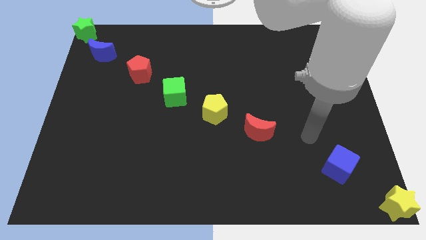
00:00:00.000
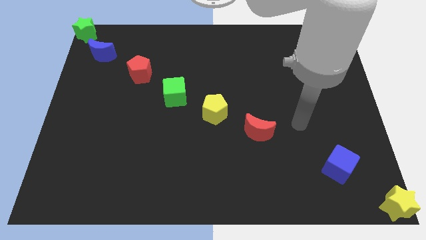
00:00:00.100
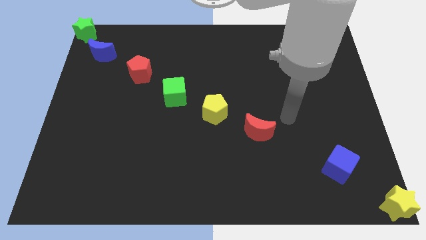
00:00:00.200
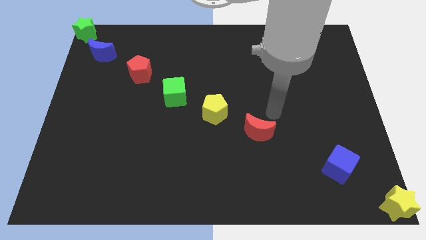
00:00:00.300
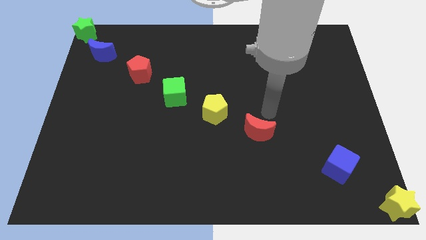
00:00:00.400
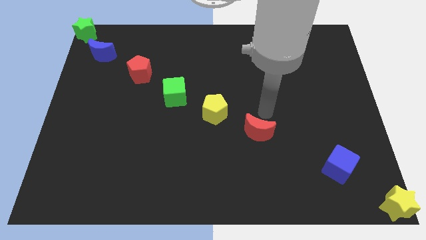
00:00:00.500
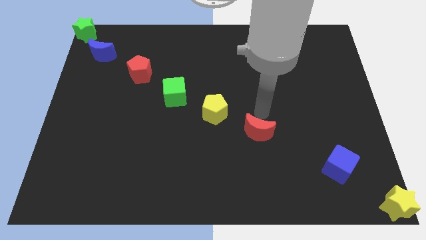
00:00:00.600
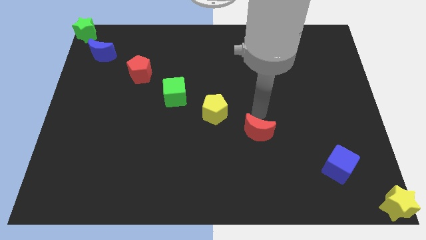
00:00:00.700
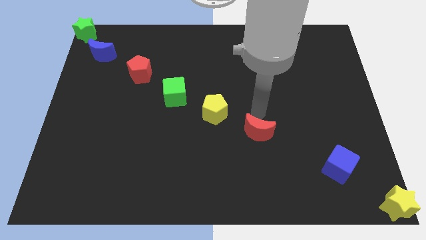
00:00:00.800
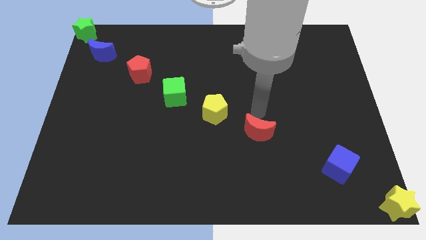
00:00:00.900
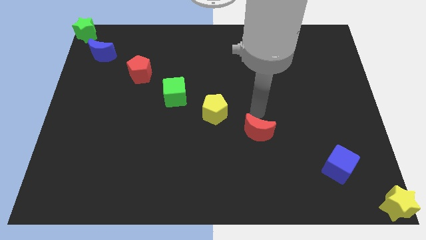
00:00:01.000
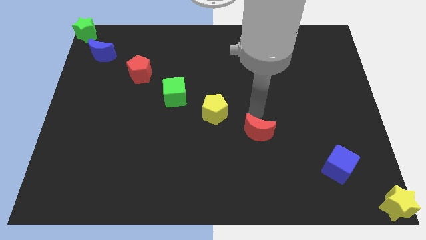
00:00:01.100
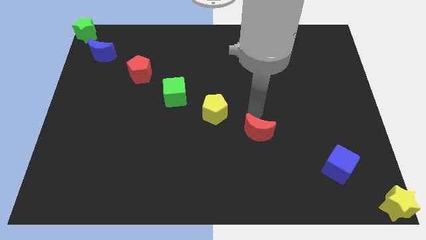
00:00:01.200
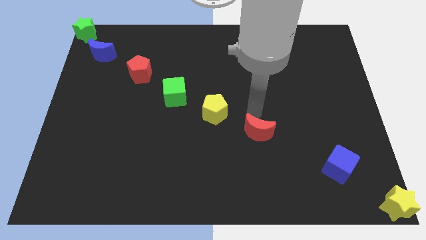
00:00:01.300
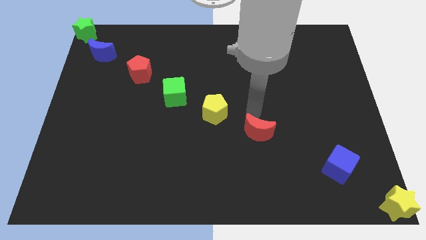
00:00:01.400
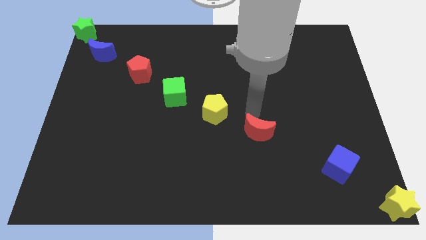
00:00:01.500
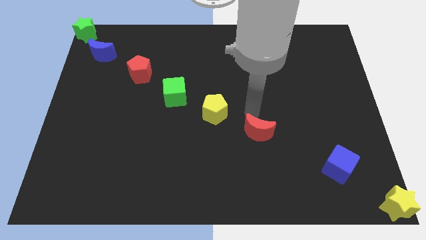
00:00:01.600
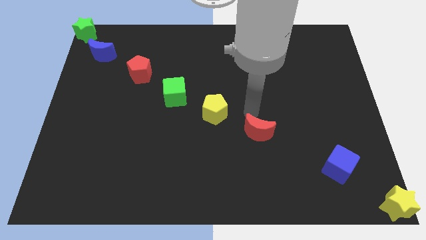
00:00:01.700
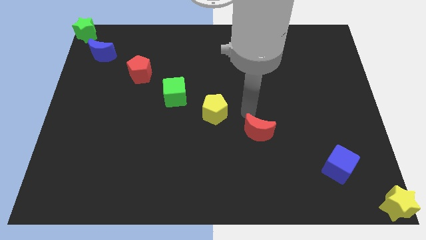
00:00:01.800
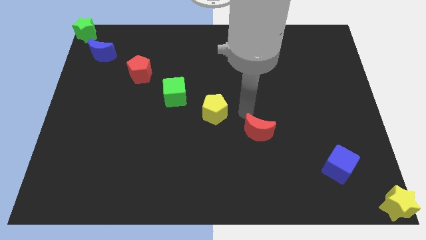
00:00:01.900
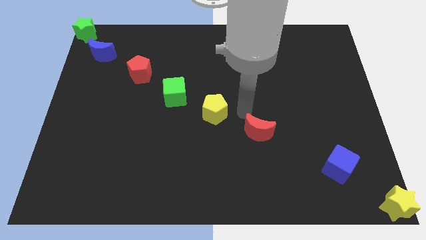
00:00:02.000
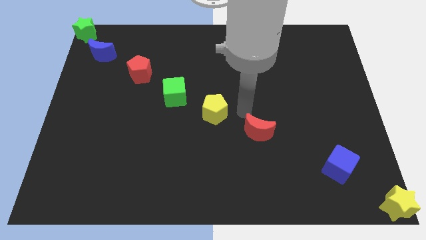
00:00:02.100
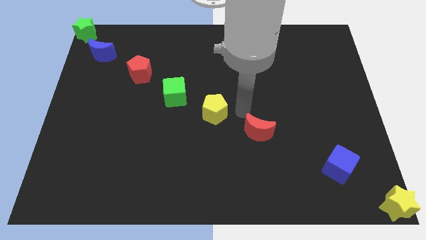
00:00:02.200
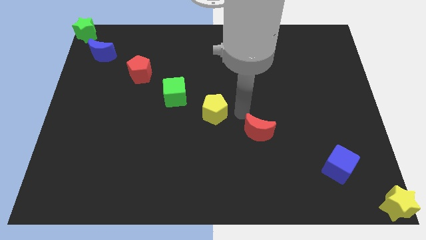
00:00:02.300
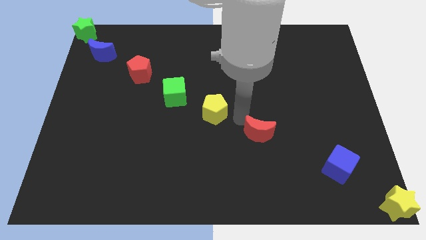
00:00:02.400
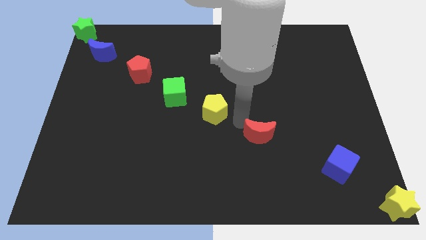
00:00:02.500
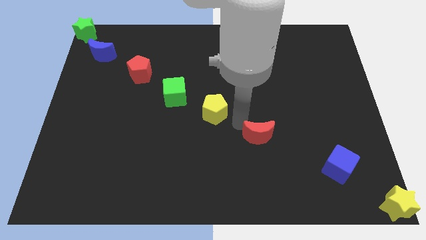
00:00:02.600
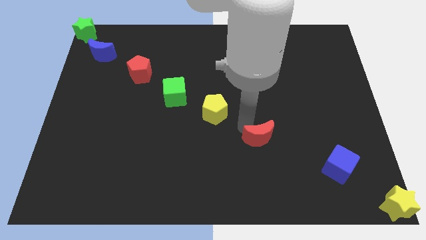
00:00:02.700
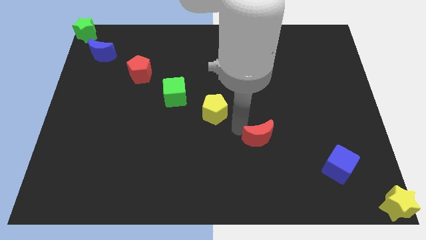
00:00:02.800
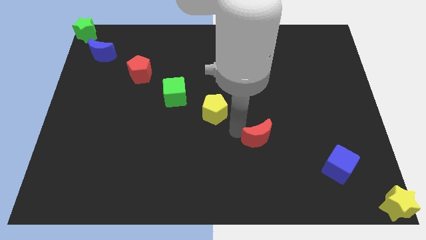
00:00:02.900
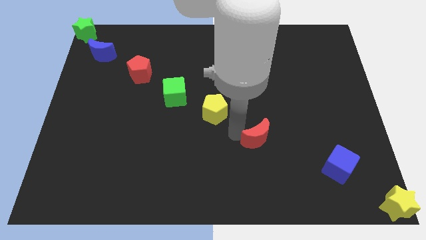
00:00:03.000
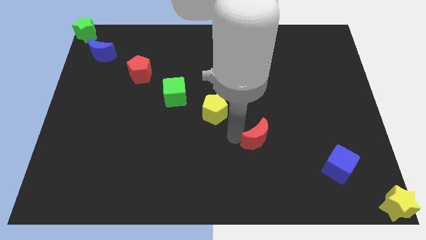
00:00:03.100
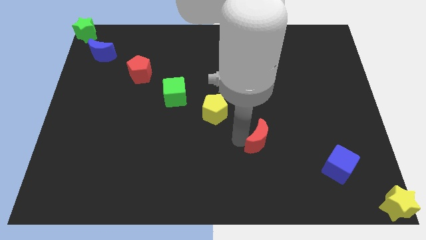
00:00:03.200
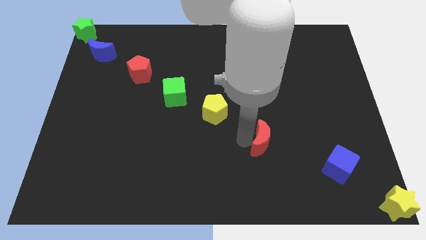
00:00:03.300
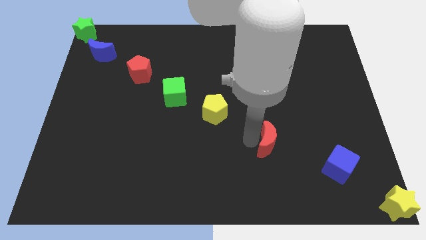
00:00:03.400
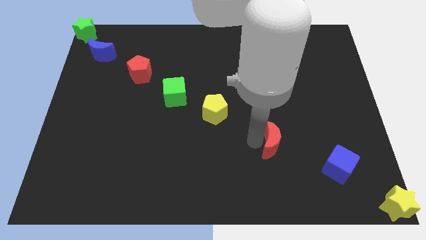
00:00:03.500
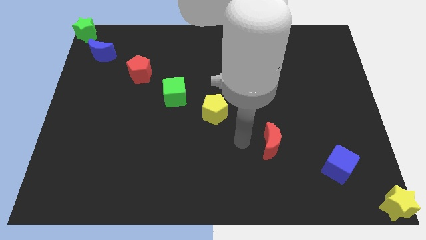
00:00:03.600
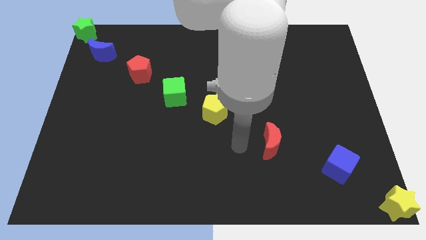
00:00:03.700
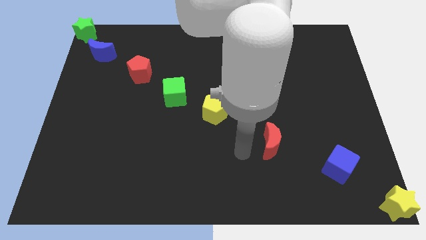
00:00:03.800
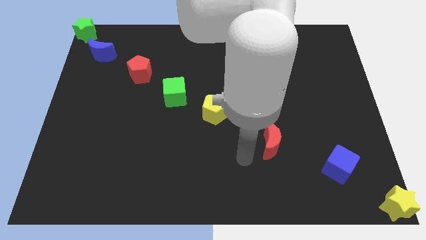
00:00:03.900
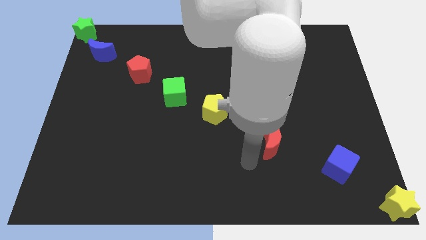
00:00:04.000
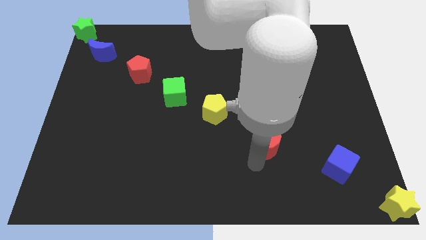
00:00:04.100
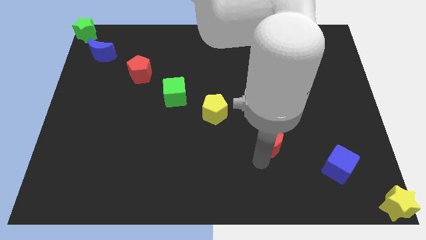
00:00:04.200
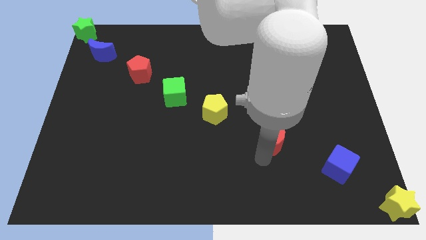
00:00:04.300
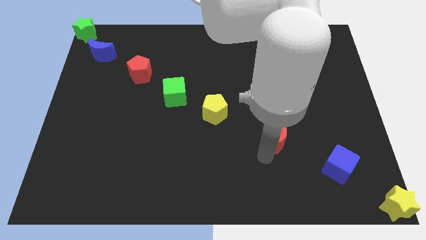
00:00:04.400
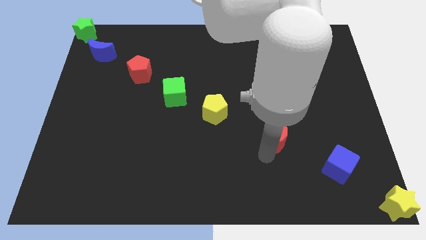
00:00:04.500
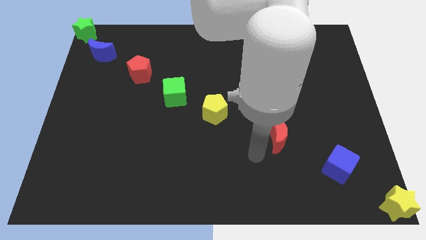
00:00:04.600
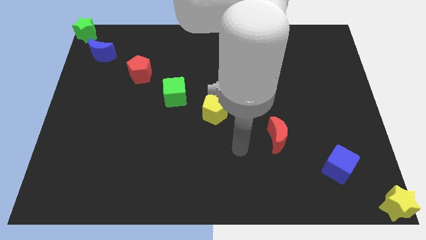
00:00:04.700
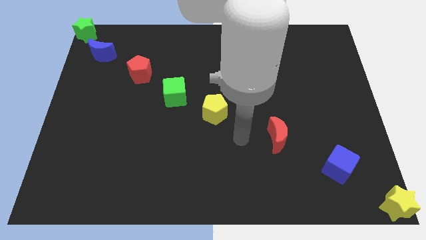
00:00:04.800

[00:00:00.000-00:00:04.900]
push the red crescent to the top left of the blue cube

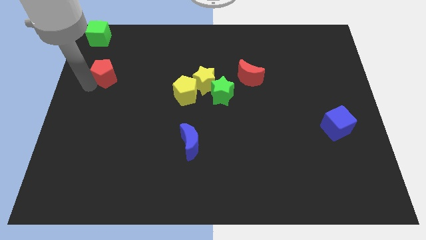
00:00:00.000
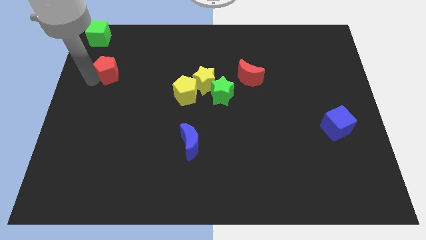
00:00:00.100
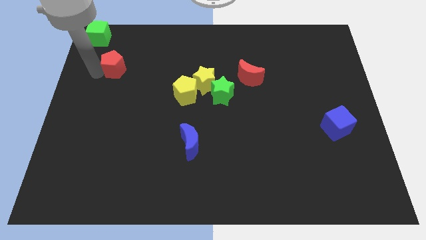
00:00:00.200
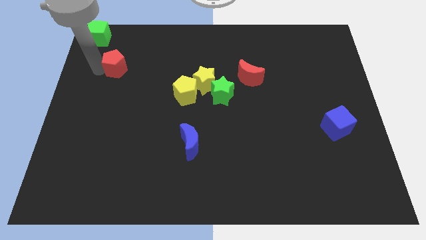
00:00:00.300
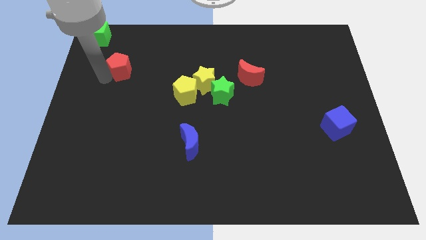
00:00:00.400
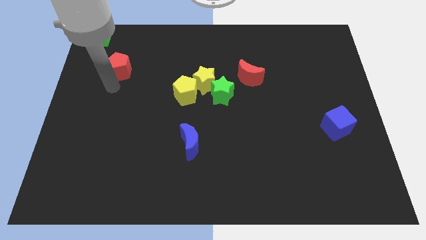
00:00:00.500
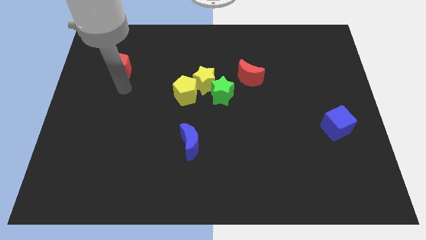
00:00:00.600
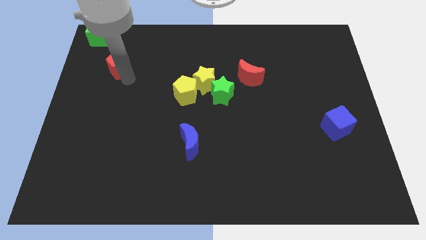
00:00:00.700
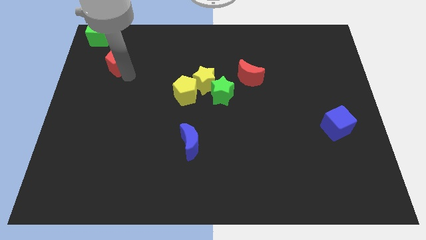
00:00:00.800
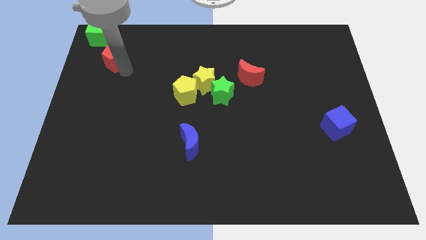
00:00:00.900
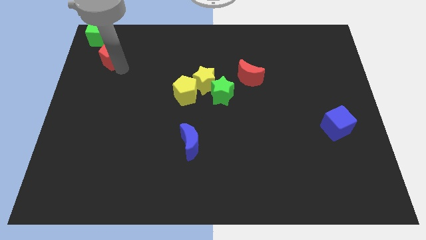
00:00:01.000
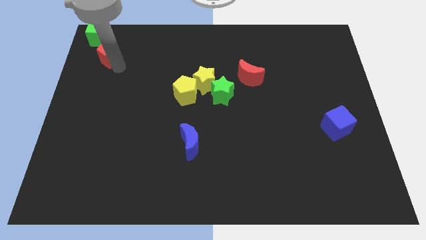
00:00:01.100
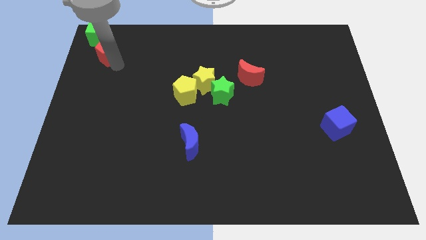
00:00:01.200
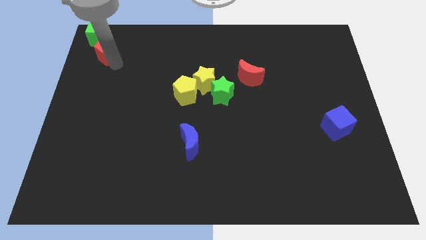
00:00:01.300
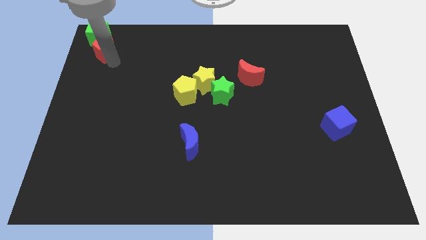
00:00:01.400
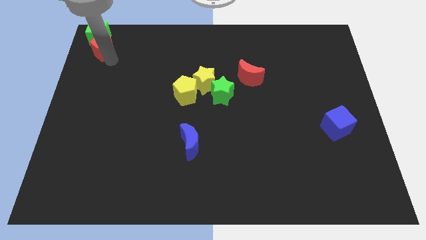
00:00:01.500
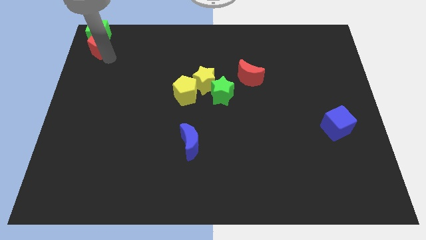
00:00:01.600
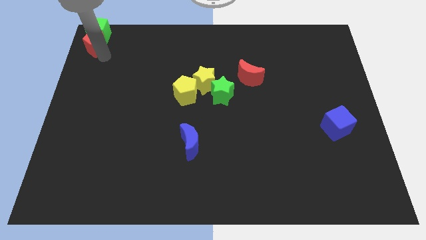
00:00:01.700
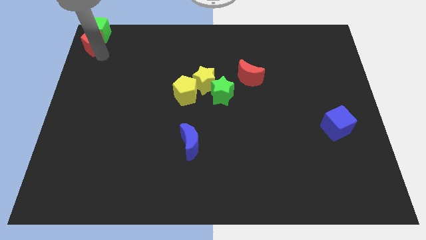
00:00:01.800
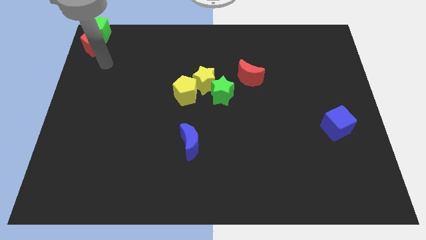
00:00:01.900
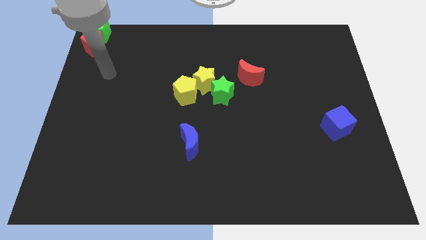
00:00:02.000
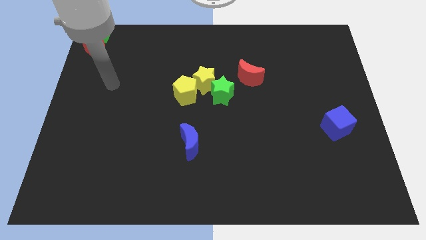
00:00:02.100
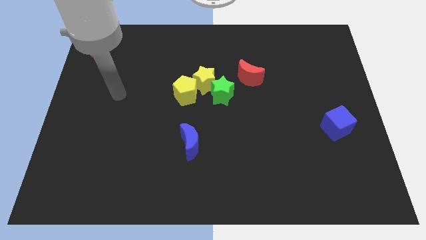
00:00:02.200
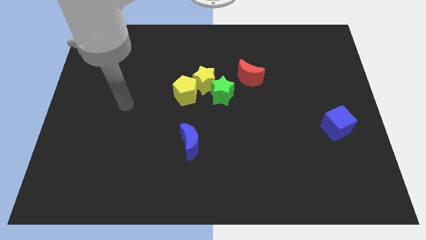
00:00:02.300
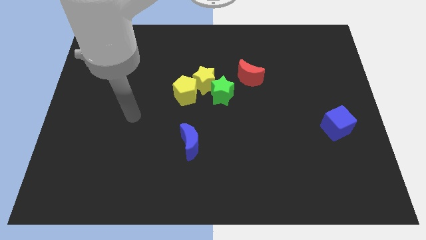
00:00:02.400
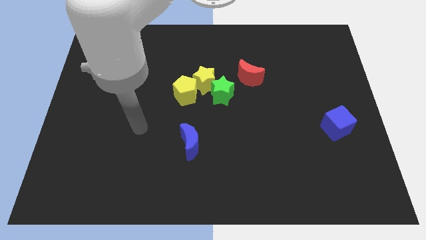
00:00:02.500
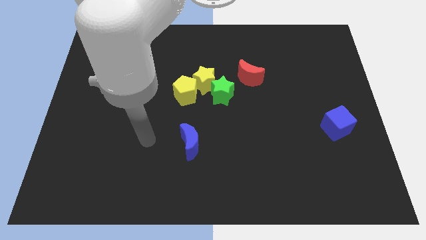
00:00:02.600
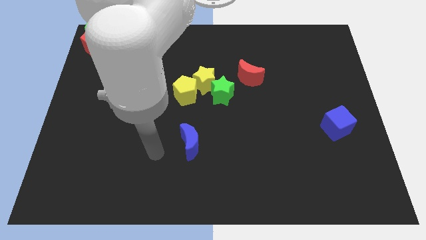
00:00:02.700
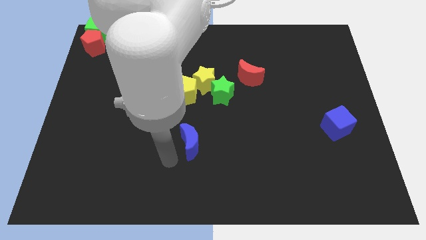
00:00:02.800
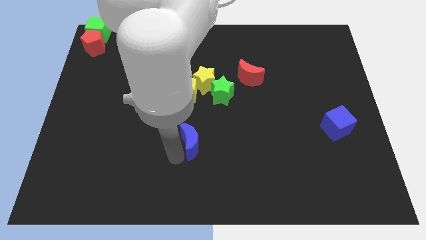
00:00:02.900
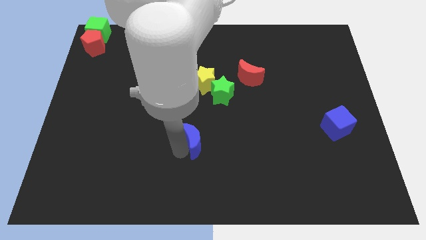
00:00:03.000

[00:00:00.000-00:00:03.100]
move red pentagon below the green cube

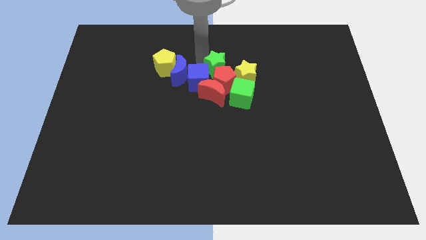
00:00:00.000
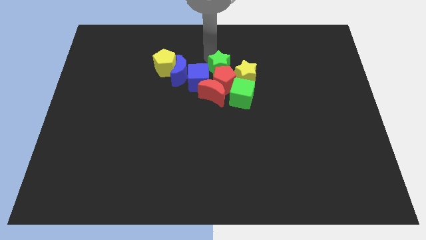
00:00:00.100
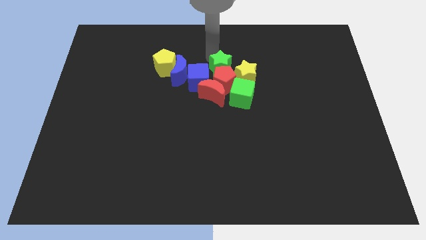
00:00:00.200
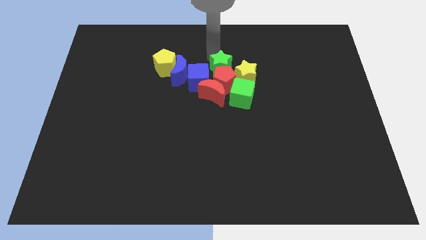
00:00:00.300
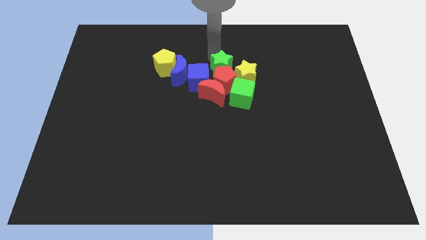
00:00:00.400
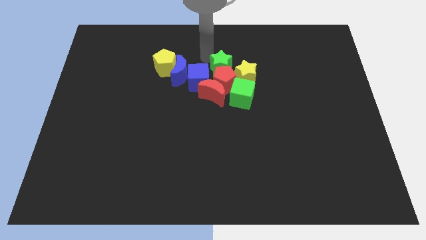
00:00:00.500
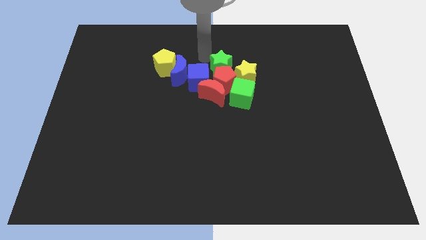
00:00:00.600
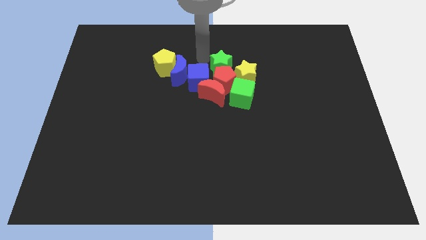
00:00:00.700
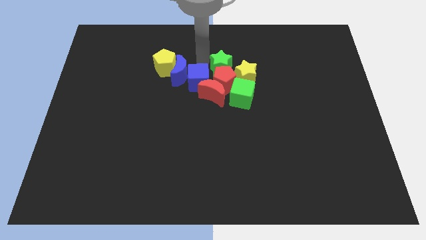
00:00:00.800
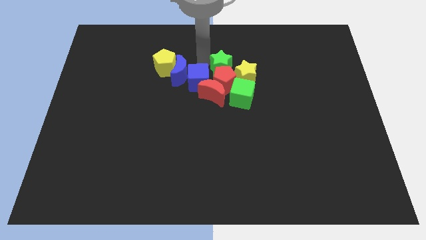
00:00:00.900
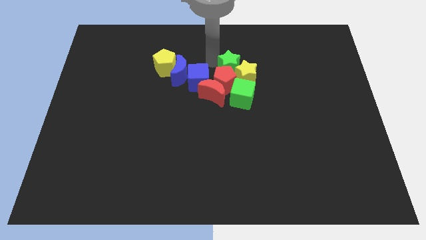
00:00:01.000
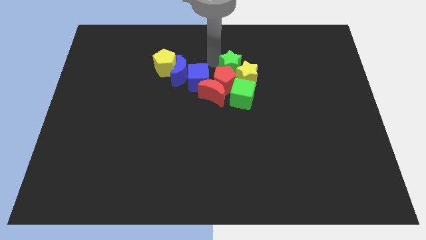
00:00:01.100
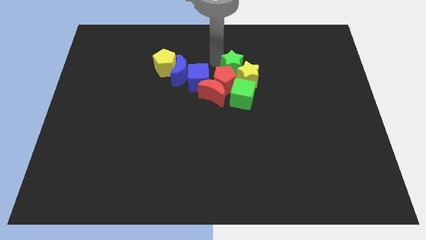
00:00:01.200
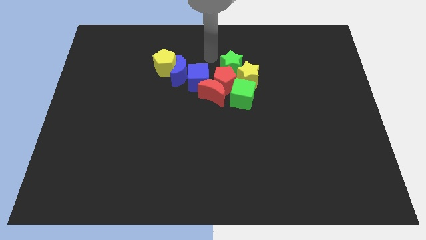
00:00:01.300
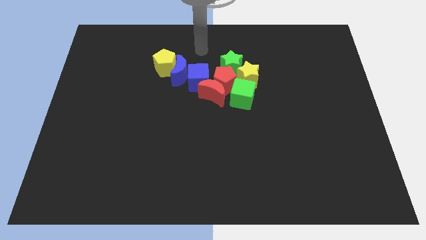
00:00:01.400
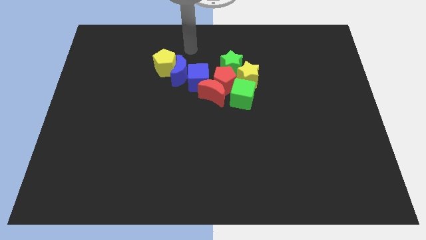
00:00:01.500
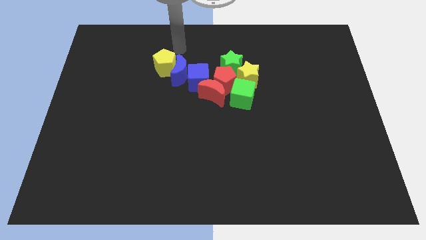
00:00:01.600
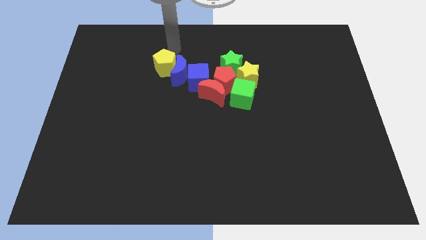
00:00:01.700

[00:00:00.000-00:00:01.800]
push the green star into yellow star
